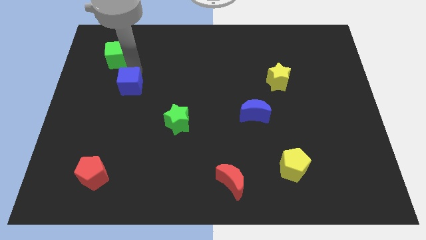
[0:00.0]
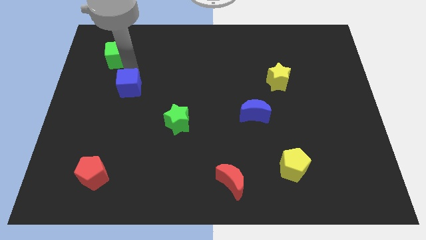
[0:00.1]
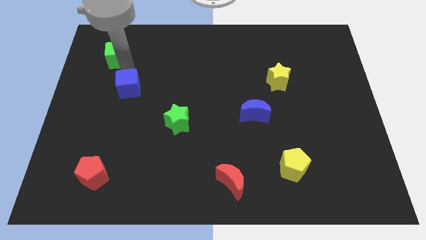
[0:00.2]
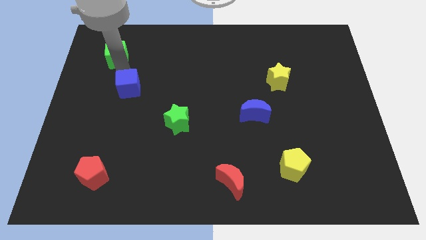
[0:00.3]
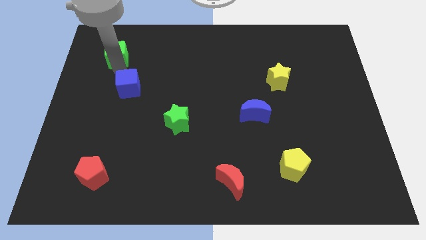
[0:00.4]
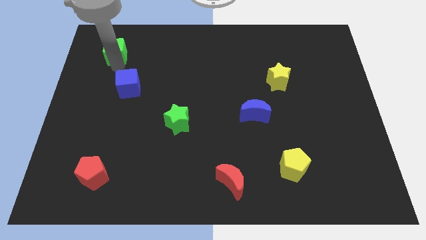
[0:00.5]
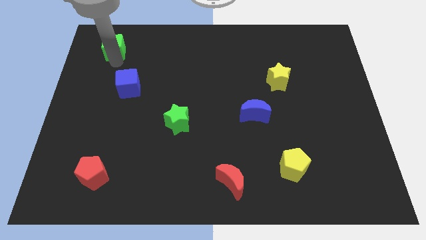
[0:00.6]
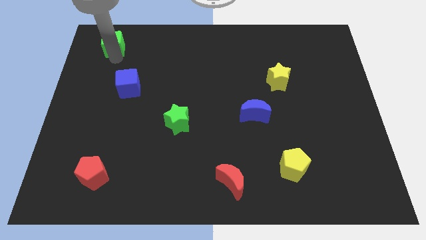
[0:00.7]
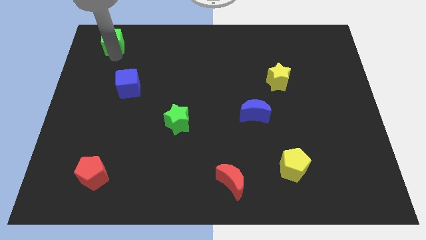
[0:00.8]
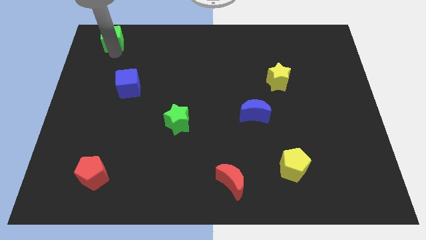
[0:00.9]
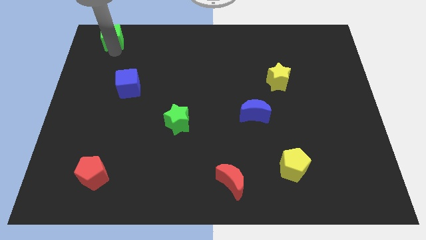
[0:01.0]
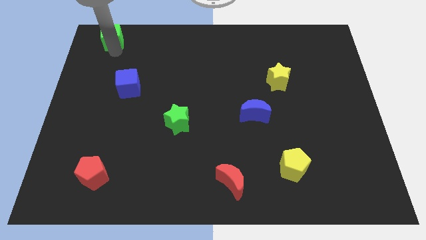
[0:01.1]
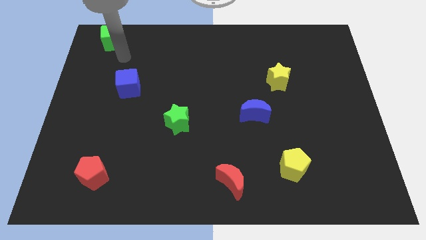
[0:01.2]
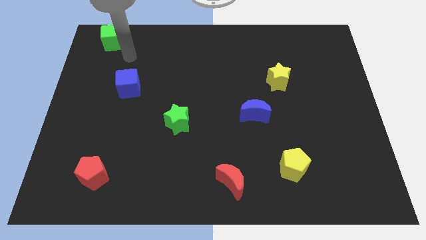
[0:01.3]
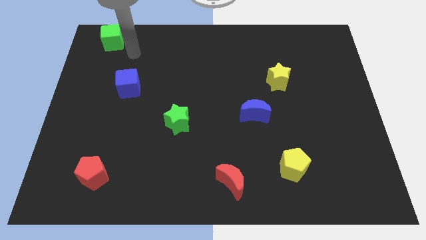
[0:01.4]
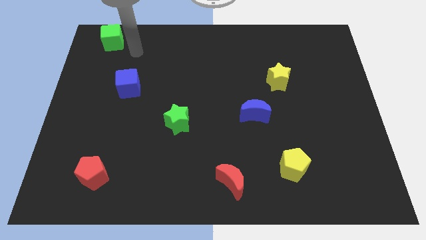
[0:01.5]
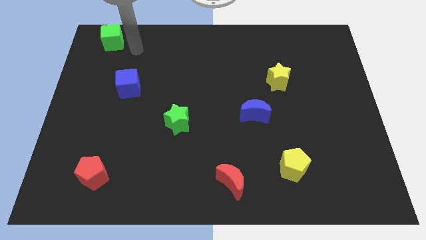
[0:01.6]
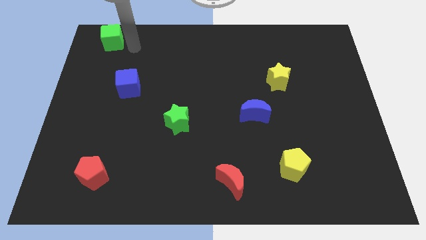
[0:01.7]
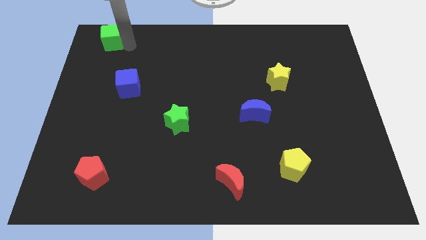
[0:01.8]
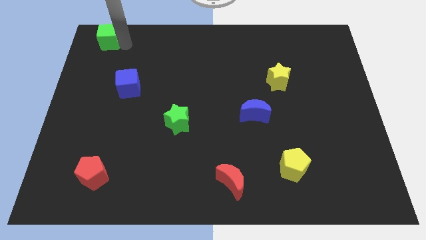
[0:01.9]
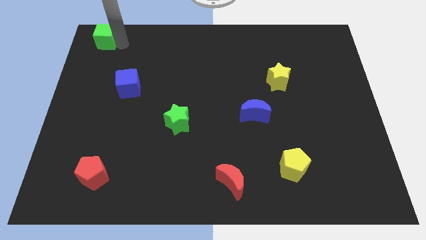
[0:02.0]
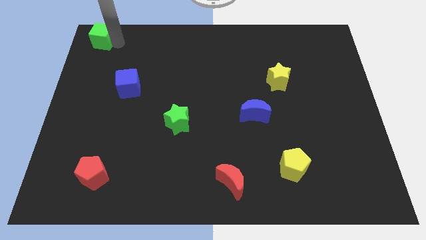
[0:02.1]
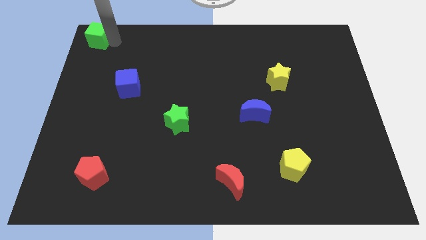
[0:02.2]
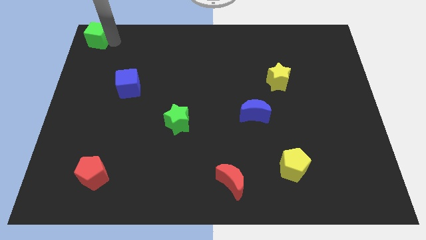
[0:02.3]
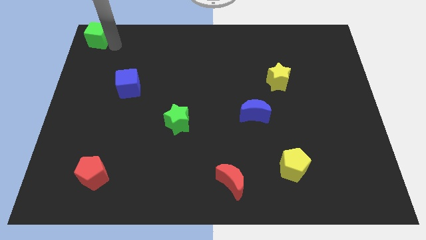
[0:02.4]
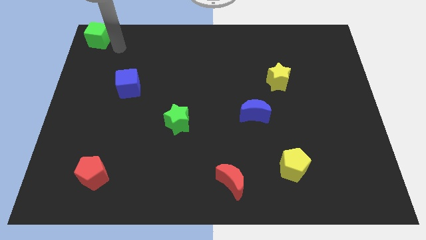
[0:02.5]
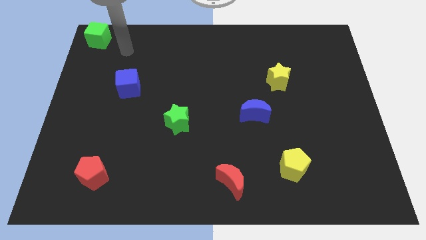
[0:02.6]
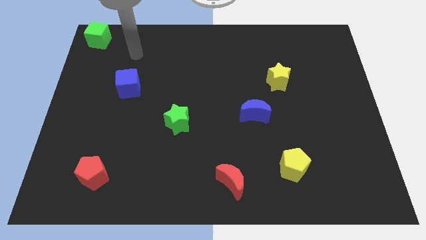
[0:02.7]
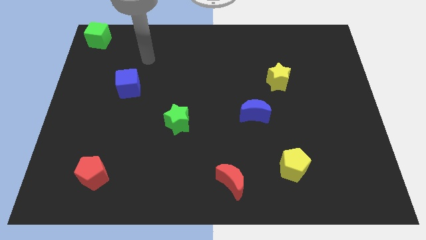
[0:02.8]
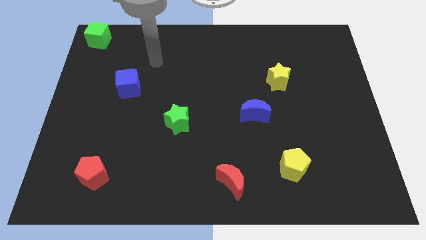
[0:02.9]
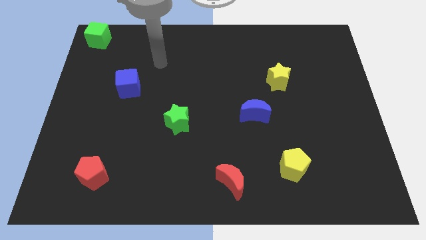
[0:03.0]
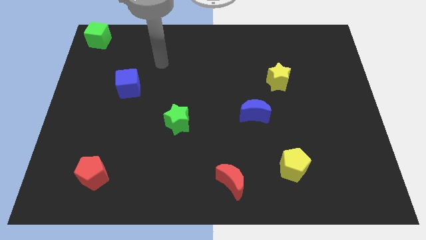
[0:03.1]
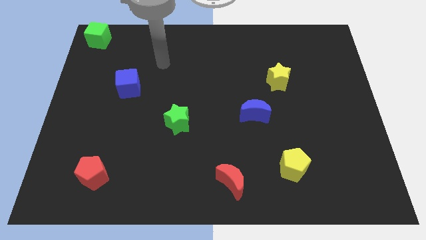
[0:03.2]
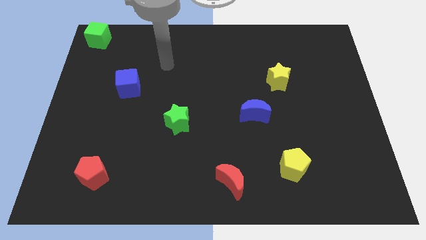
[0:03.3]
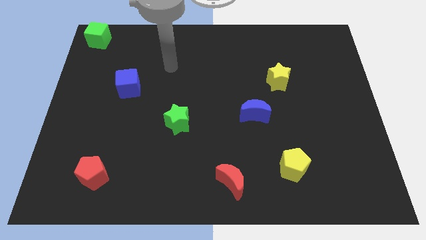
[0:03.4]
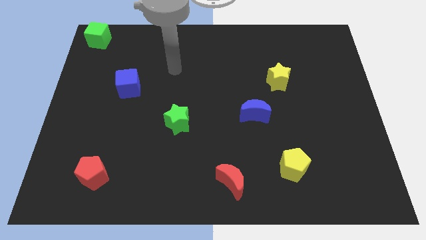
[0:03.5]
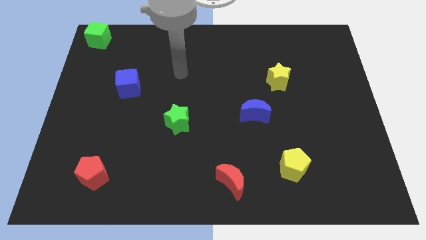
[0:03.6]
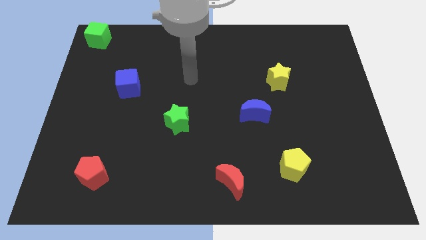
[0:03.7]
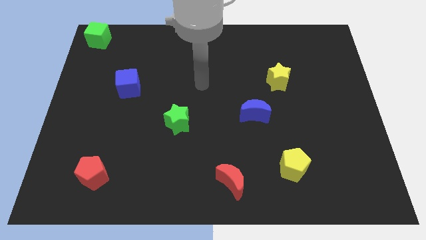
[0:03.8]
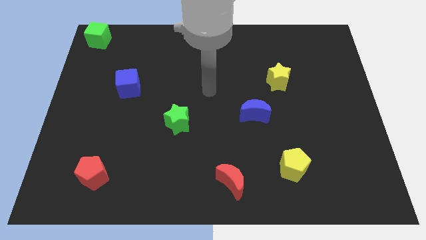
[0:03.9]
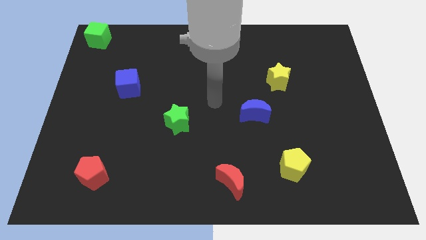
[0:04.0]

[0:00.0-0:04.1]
move green cube to the top left

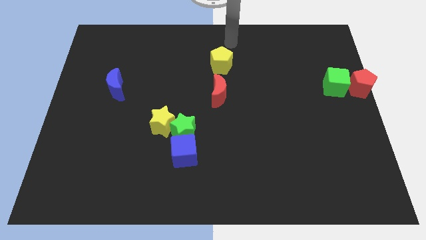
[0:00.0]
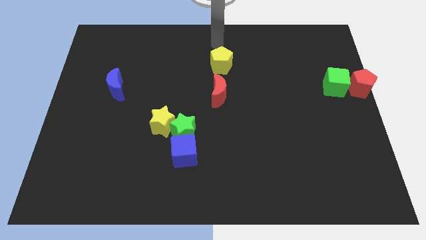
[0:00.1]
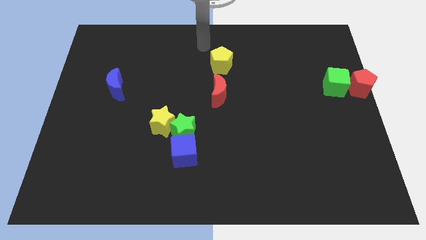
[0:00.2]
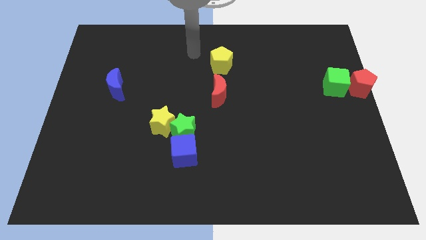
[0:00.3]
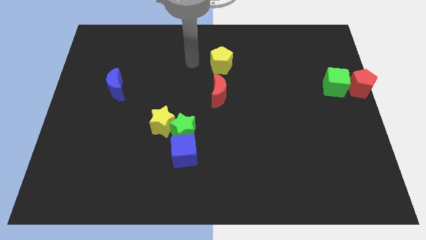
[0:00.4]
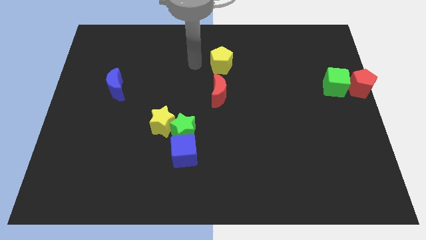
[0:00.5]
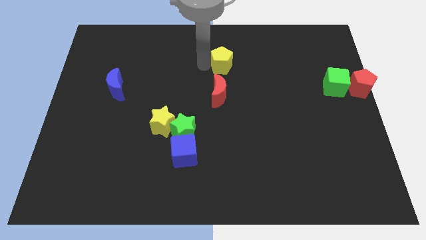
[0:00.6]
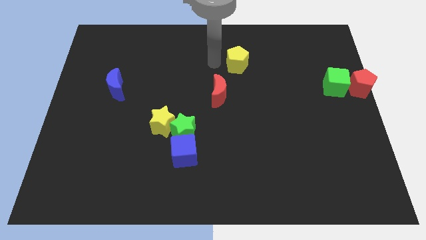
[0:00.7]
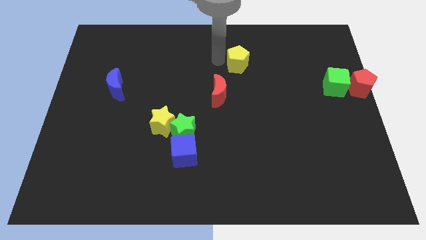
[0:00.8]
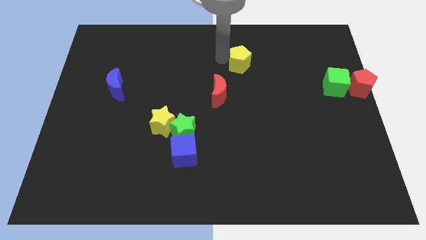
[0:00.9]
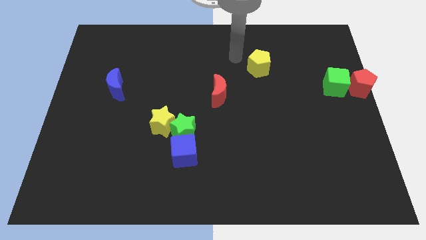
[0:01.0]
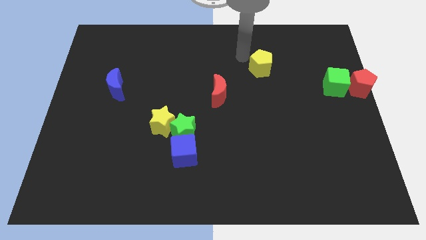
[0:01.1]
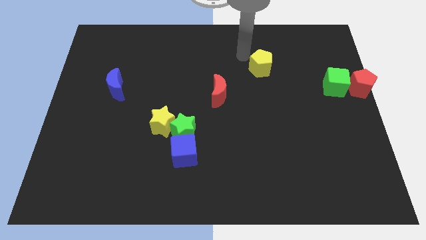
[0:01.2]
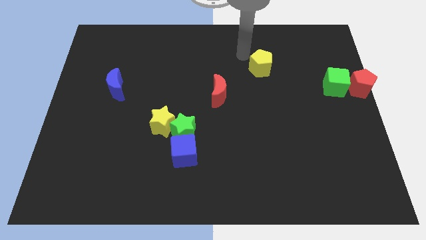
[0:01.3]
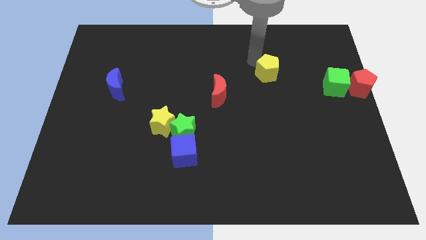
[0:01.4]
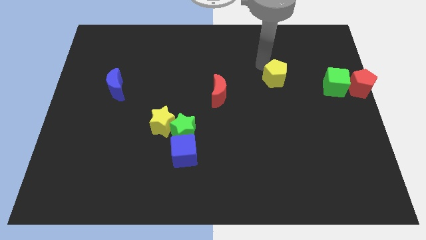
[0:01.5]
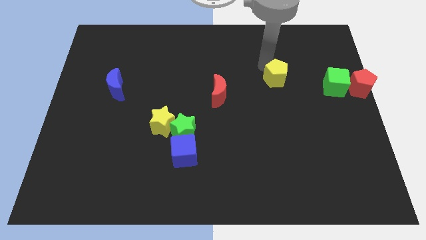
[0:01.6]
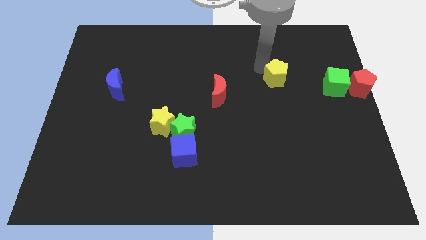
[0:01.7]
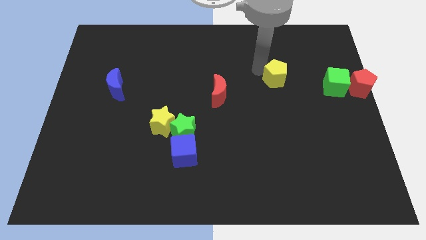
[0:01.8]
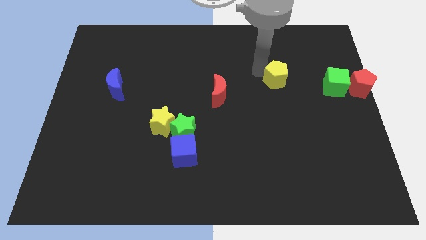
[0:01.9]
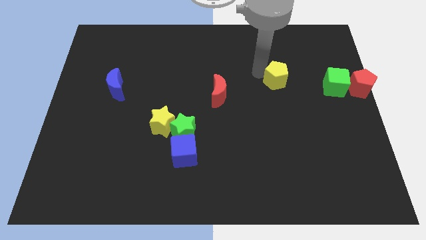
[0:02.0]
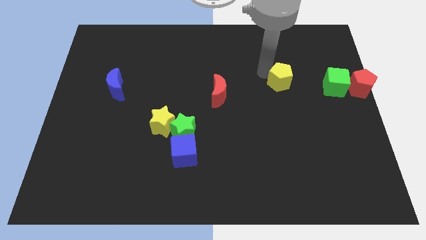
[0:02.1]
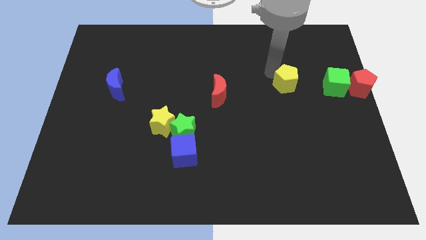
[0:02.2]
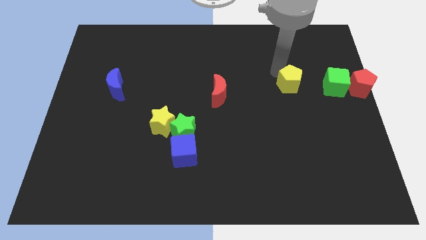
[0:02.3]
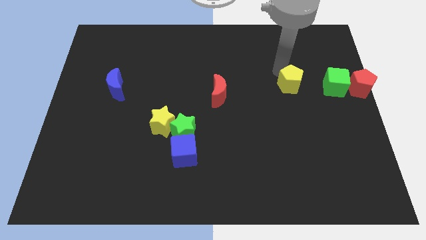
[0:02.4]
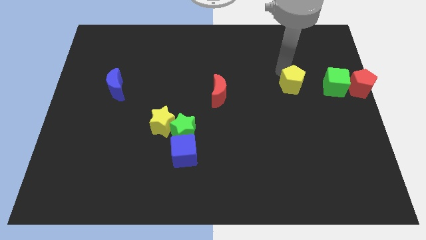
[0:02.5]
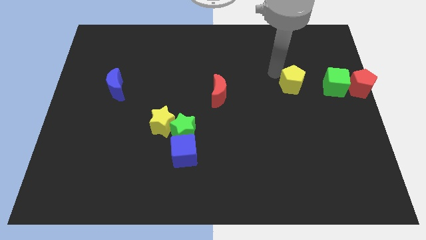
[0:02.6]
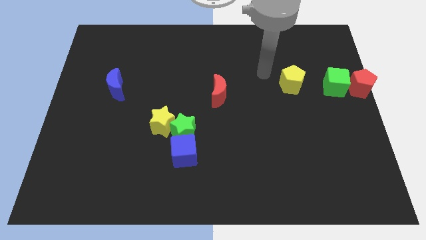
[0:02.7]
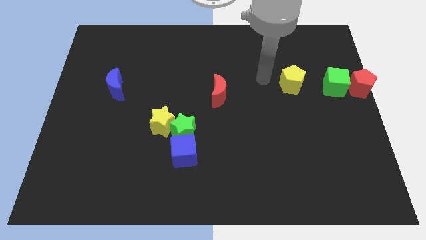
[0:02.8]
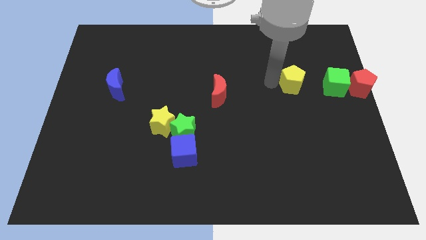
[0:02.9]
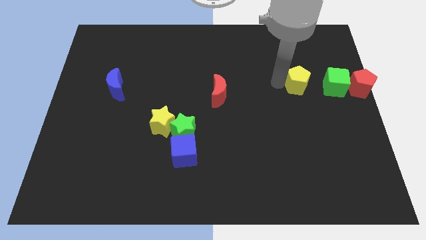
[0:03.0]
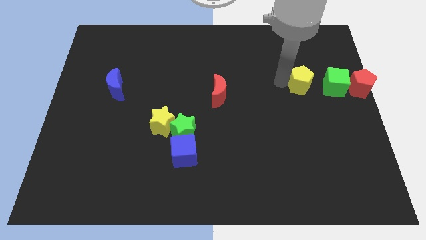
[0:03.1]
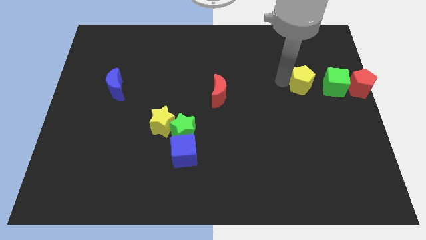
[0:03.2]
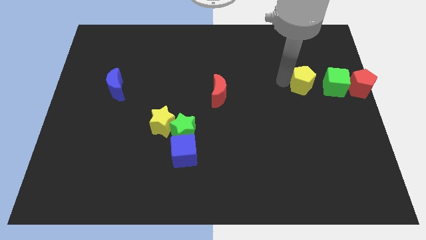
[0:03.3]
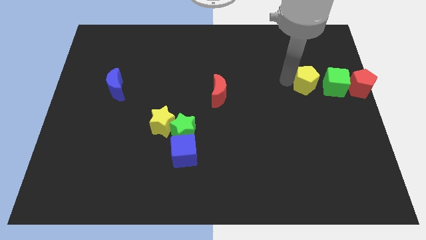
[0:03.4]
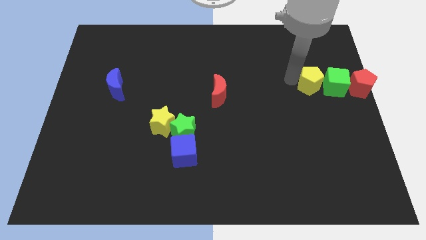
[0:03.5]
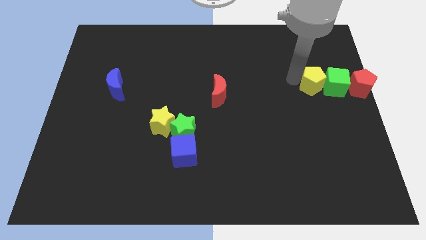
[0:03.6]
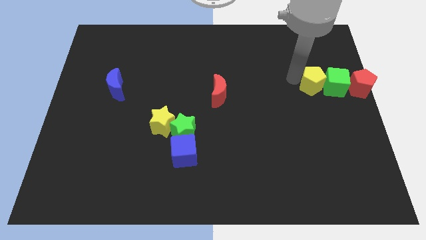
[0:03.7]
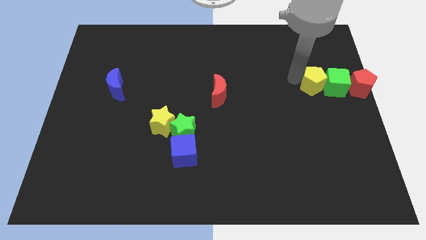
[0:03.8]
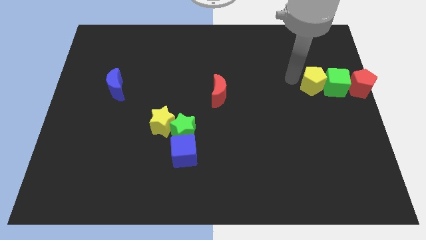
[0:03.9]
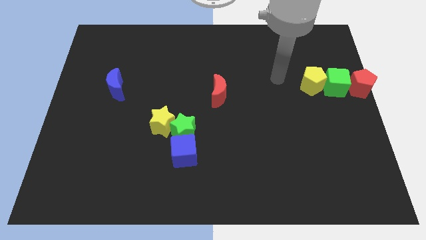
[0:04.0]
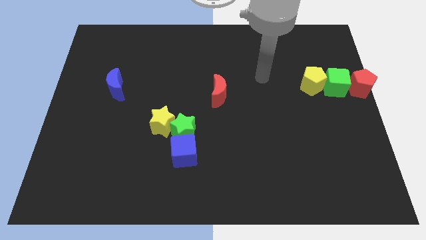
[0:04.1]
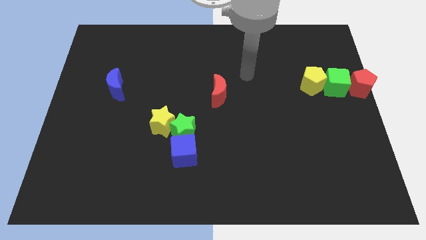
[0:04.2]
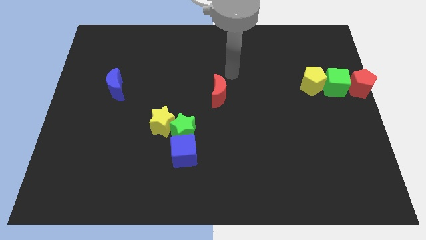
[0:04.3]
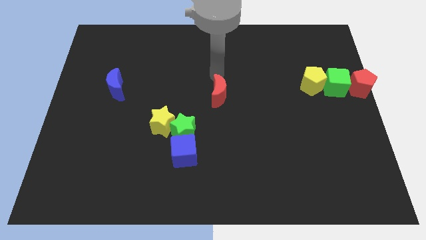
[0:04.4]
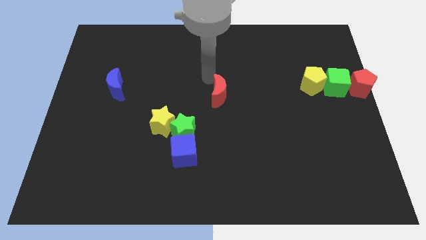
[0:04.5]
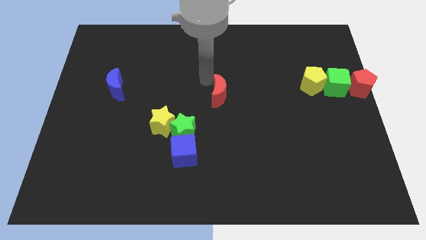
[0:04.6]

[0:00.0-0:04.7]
move the yellow pentagon left to the green cube
